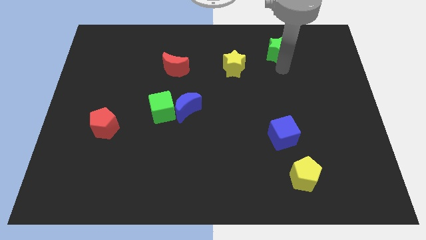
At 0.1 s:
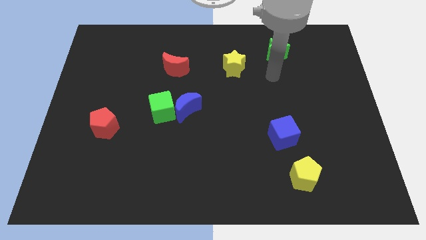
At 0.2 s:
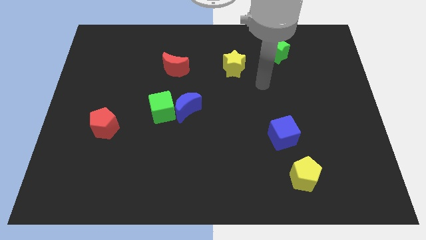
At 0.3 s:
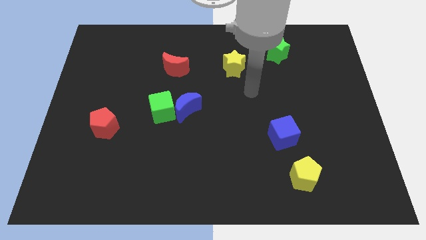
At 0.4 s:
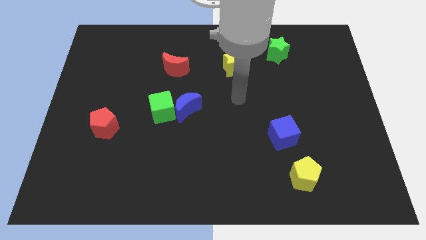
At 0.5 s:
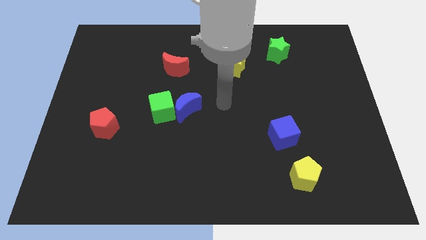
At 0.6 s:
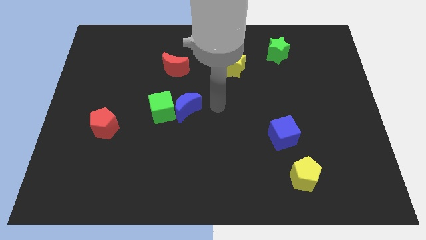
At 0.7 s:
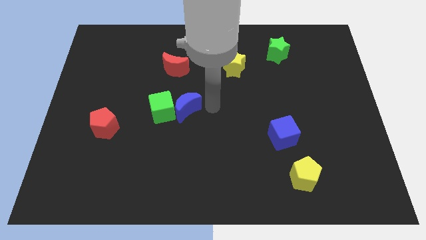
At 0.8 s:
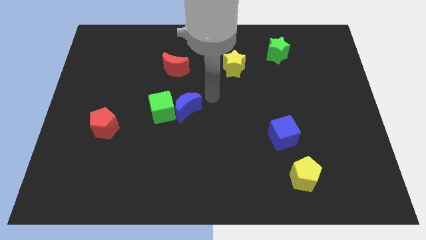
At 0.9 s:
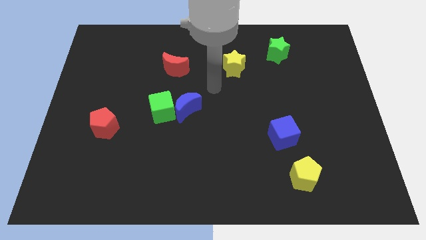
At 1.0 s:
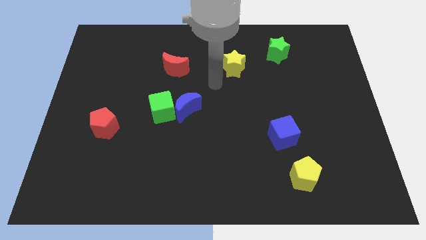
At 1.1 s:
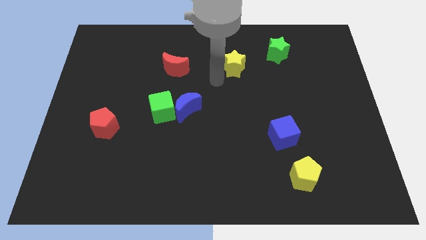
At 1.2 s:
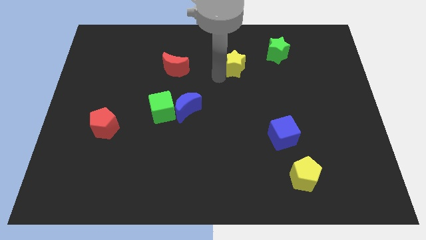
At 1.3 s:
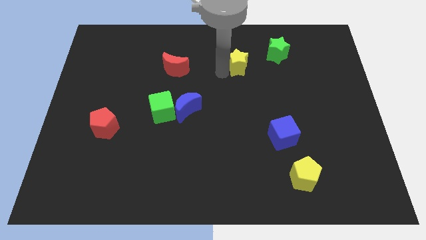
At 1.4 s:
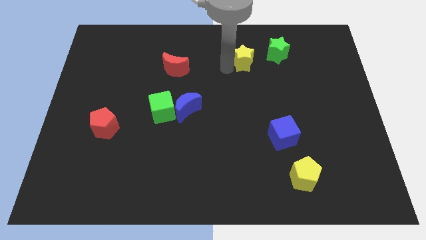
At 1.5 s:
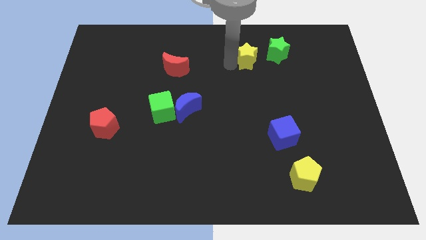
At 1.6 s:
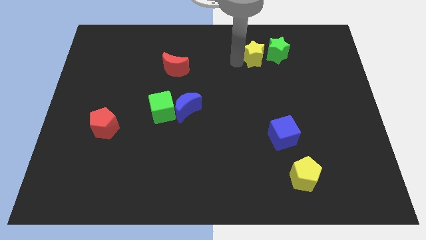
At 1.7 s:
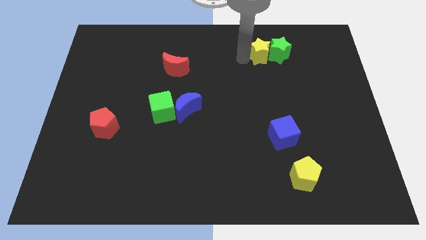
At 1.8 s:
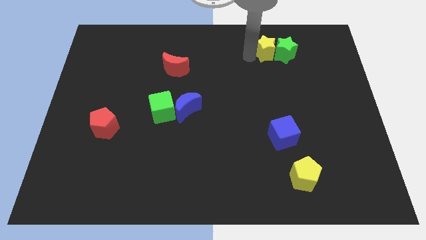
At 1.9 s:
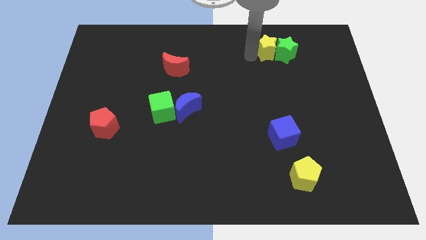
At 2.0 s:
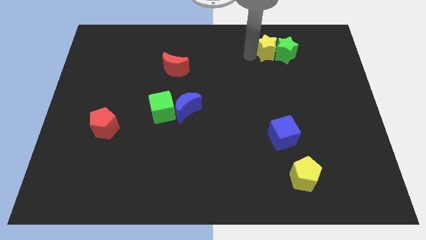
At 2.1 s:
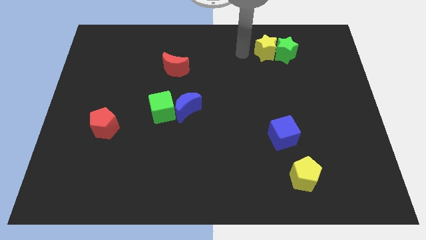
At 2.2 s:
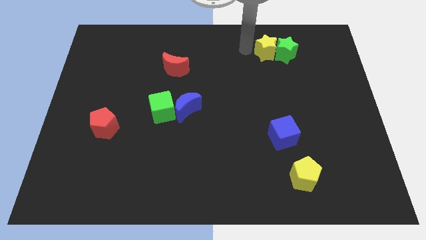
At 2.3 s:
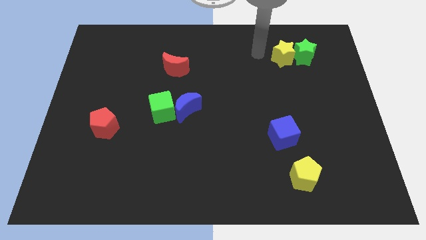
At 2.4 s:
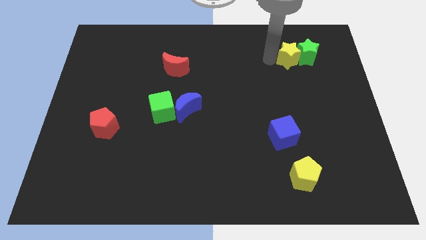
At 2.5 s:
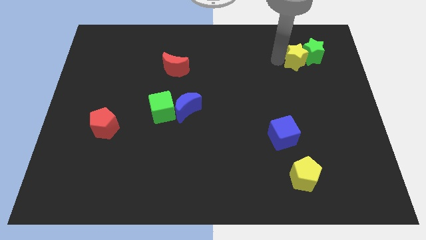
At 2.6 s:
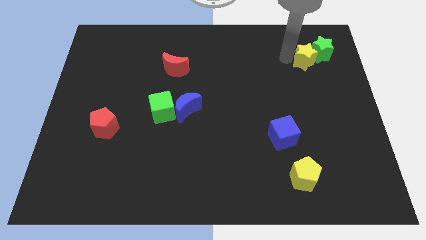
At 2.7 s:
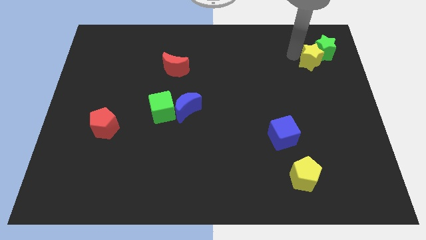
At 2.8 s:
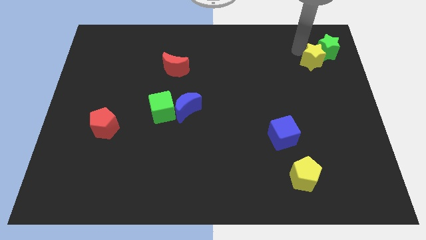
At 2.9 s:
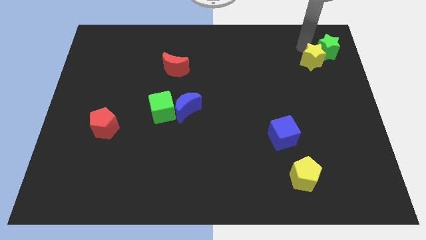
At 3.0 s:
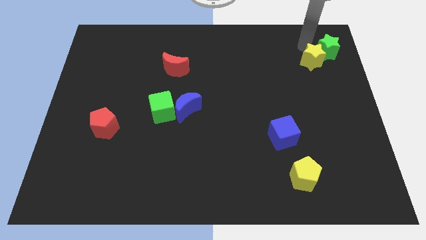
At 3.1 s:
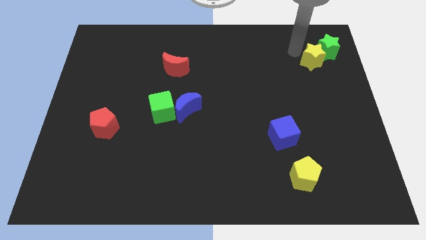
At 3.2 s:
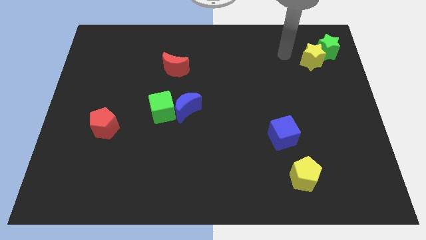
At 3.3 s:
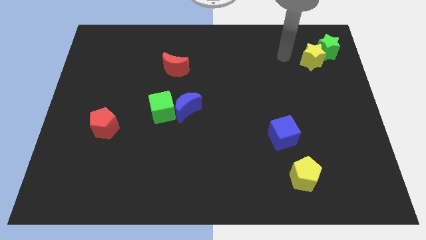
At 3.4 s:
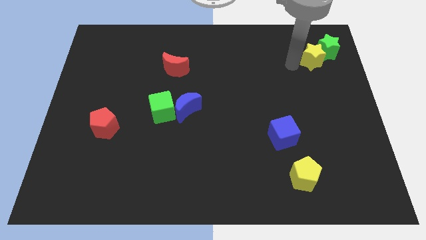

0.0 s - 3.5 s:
push the yellow star into the green star

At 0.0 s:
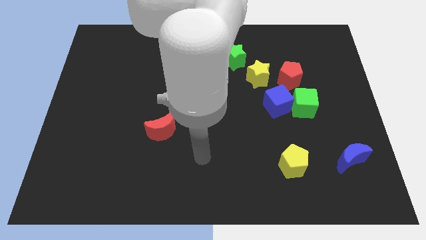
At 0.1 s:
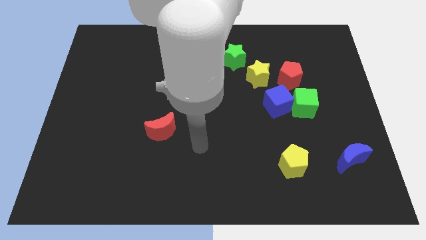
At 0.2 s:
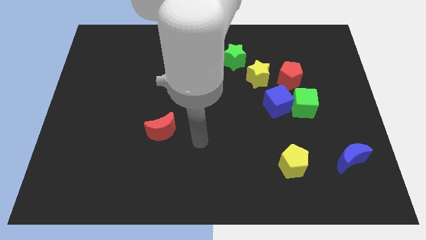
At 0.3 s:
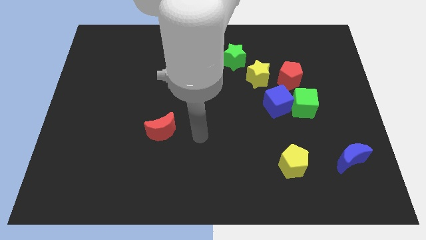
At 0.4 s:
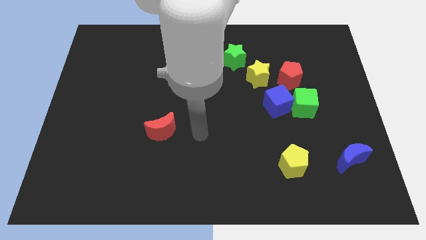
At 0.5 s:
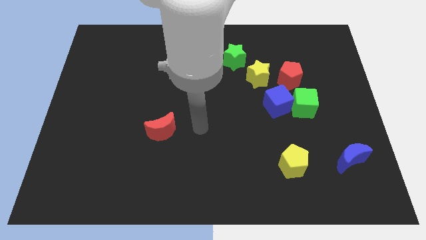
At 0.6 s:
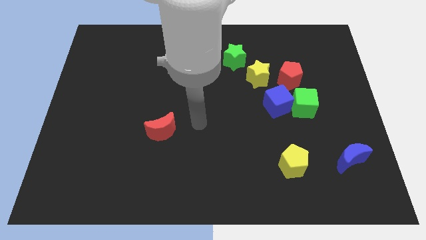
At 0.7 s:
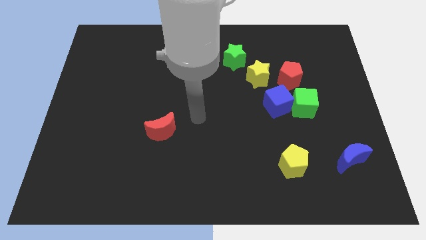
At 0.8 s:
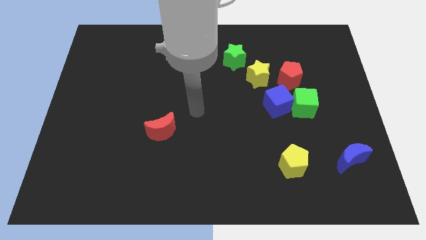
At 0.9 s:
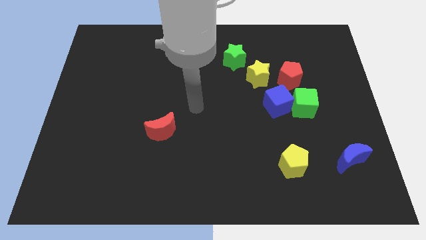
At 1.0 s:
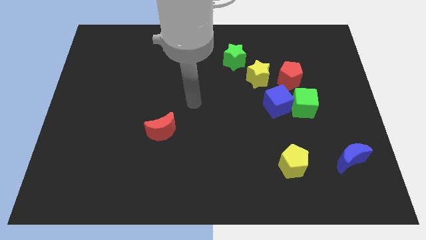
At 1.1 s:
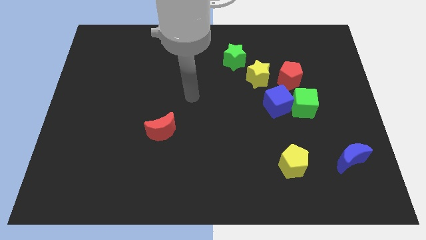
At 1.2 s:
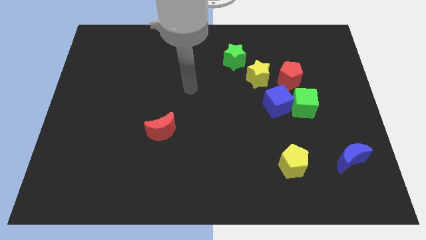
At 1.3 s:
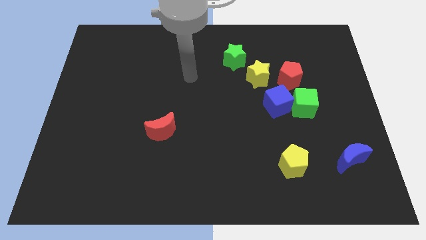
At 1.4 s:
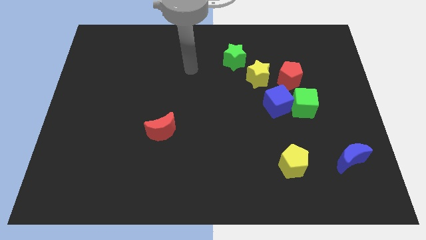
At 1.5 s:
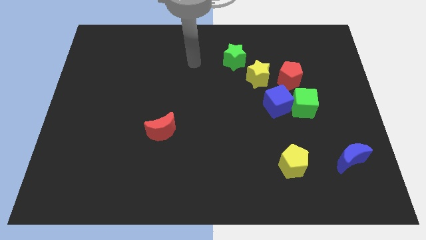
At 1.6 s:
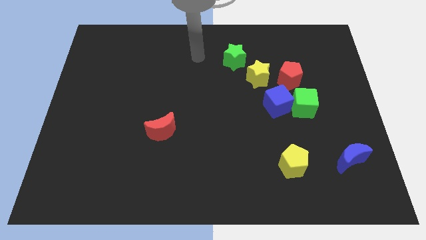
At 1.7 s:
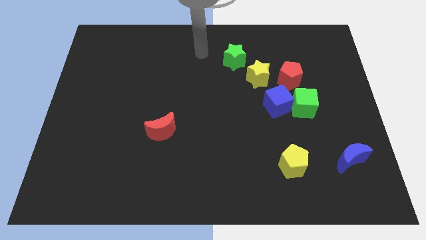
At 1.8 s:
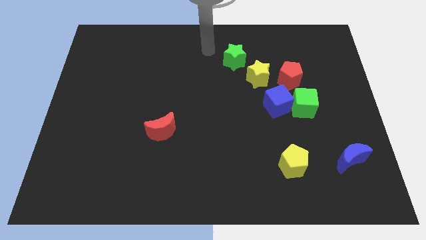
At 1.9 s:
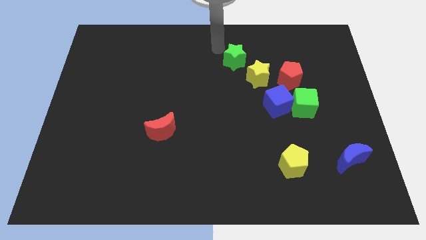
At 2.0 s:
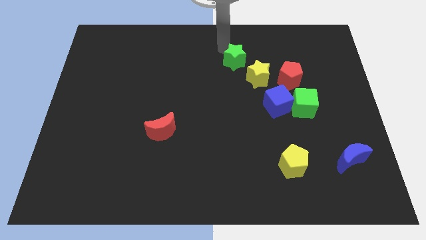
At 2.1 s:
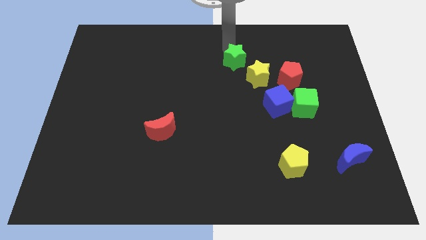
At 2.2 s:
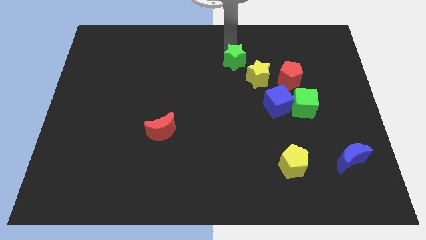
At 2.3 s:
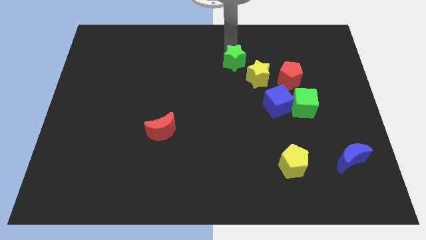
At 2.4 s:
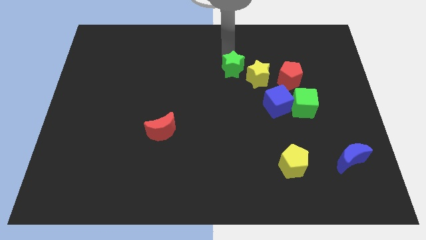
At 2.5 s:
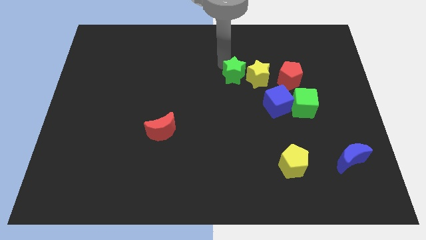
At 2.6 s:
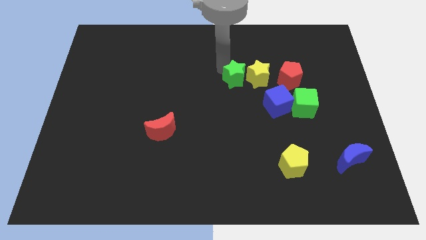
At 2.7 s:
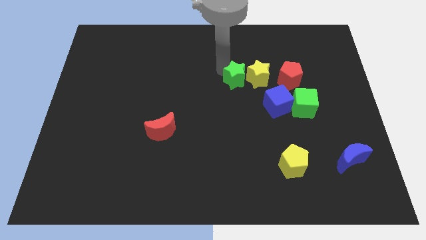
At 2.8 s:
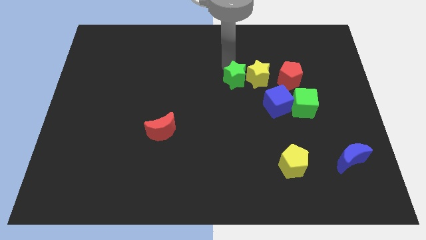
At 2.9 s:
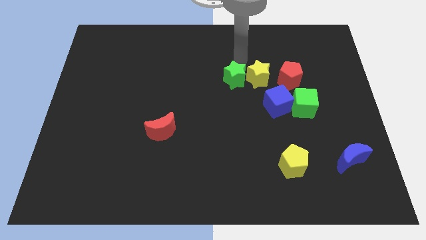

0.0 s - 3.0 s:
place the green star horizontal to the left of the yellow star

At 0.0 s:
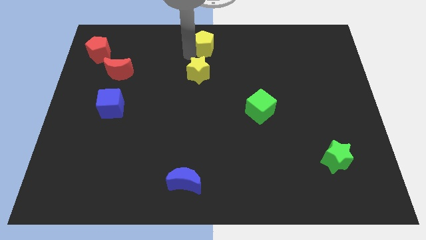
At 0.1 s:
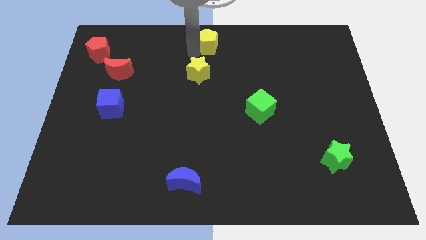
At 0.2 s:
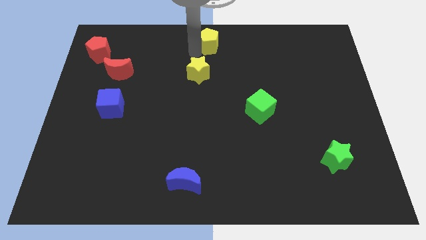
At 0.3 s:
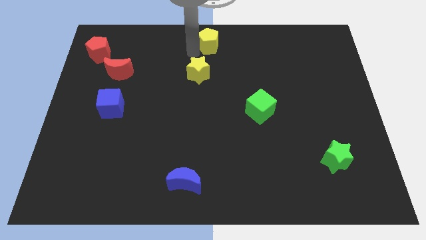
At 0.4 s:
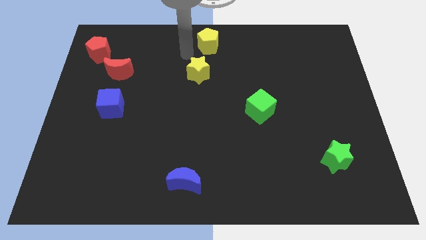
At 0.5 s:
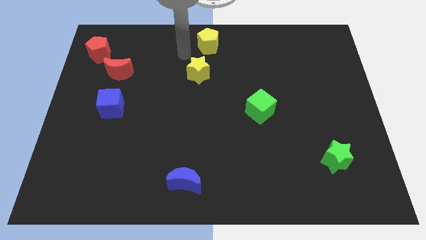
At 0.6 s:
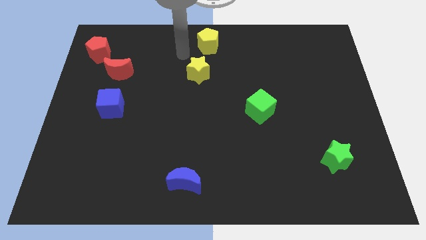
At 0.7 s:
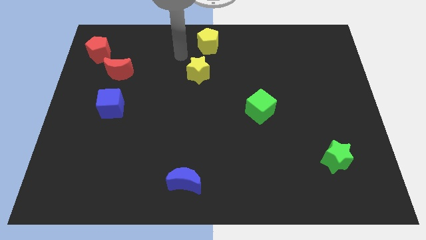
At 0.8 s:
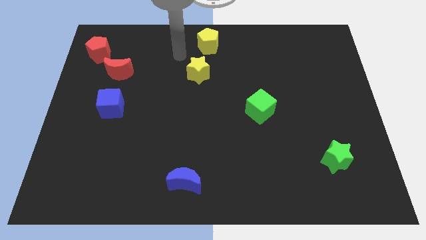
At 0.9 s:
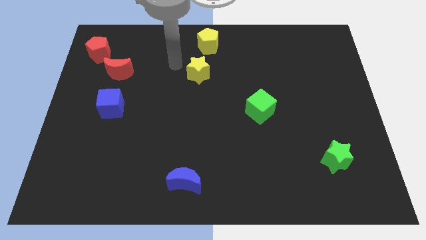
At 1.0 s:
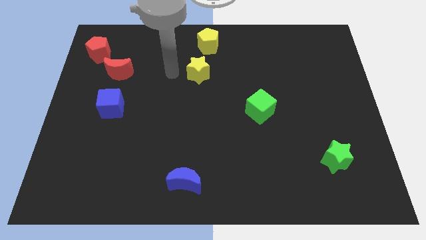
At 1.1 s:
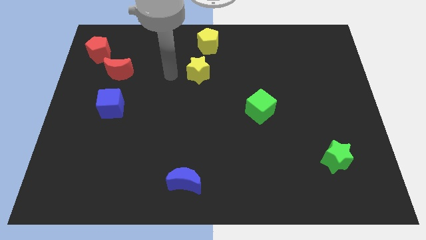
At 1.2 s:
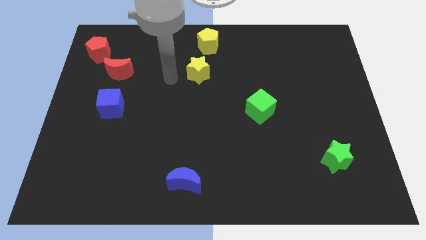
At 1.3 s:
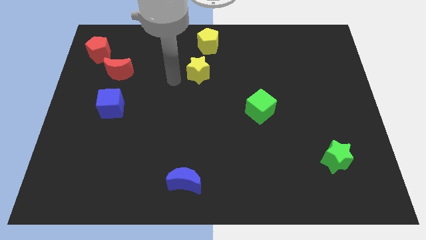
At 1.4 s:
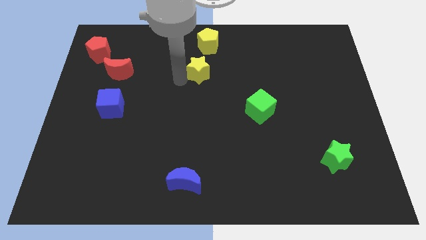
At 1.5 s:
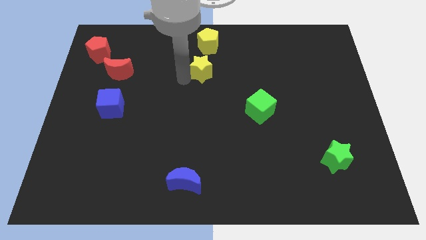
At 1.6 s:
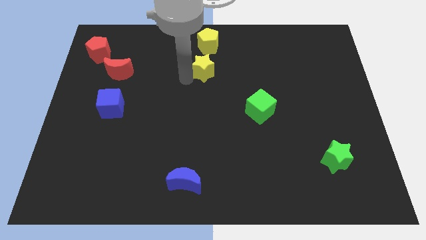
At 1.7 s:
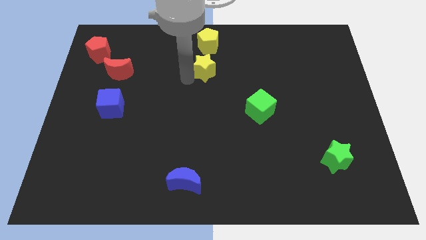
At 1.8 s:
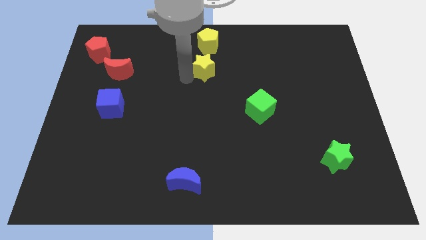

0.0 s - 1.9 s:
push yellow pentagon to the top

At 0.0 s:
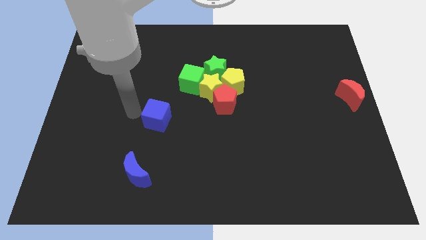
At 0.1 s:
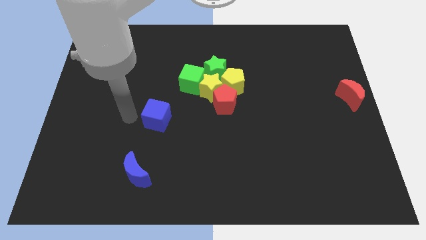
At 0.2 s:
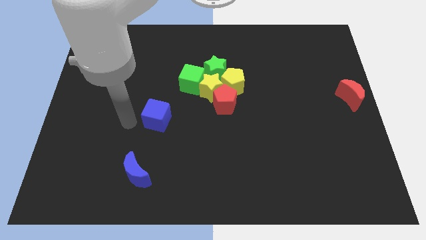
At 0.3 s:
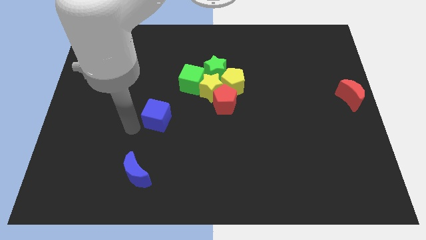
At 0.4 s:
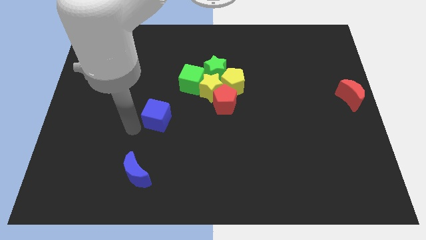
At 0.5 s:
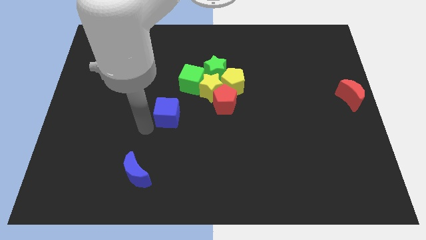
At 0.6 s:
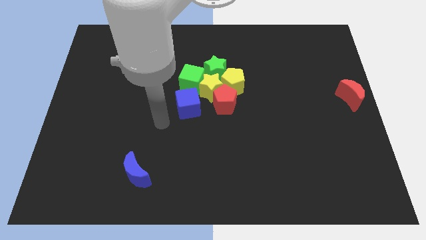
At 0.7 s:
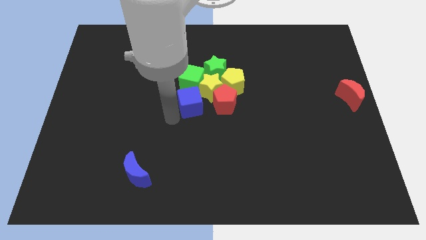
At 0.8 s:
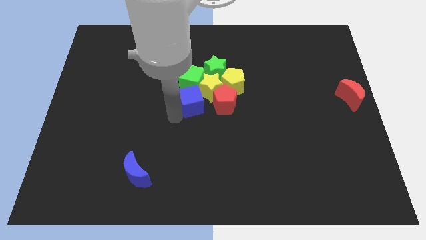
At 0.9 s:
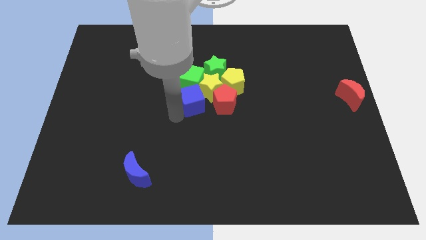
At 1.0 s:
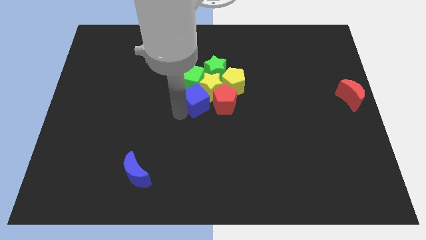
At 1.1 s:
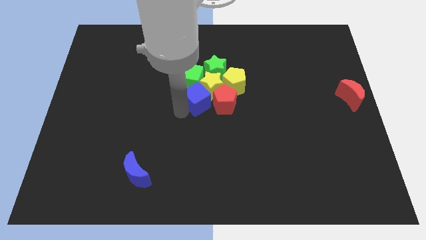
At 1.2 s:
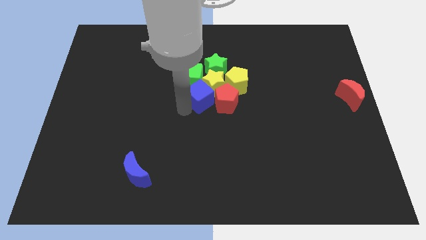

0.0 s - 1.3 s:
place blue cube to the left of red pentagon
